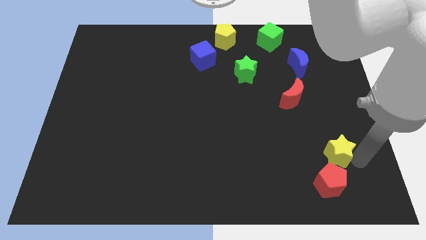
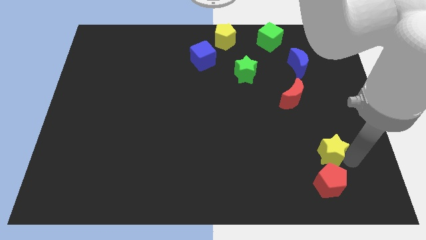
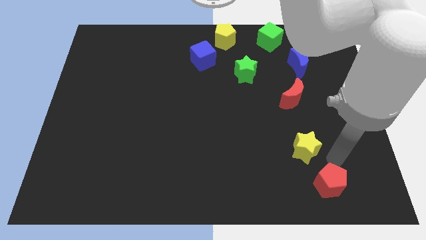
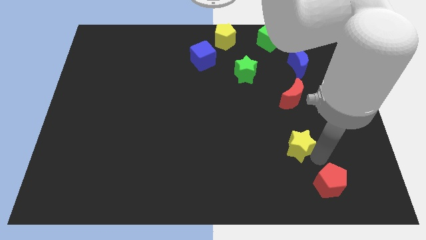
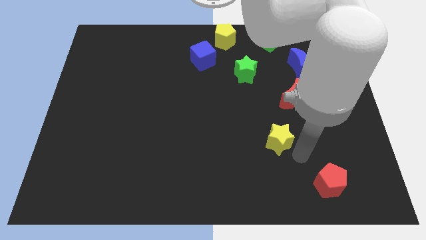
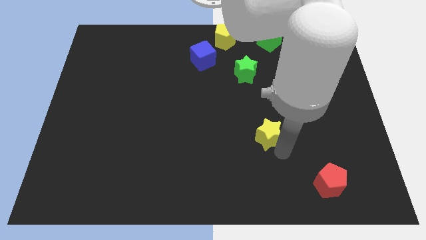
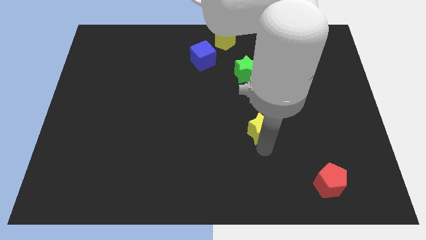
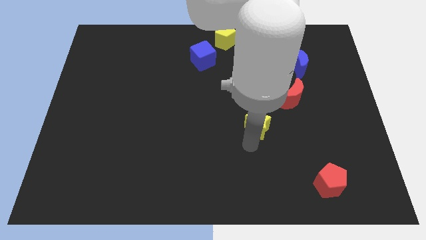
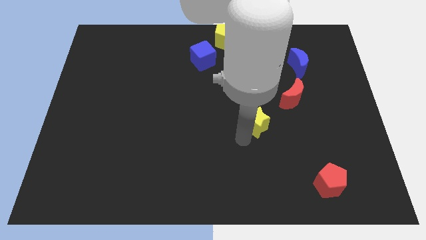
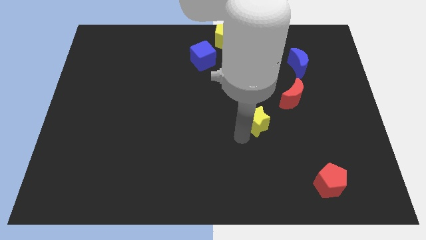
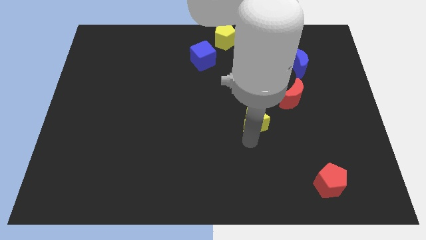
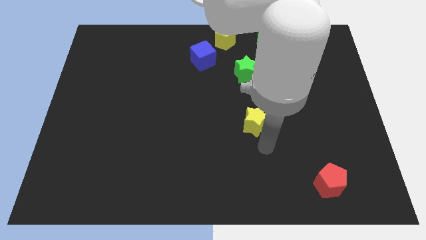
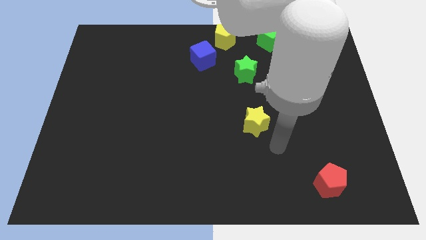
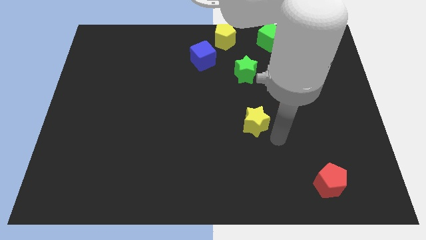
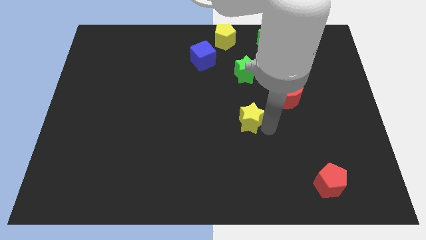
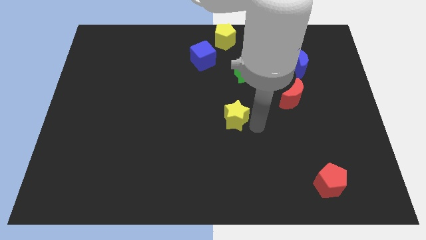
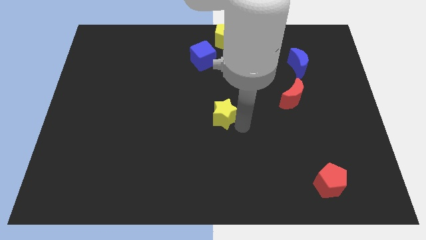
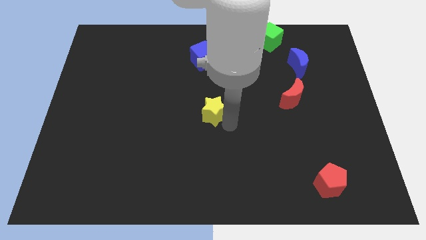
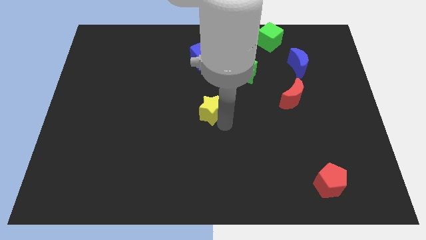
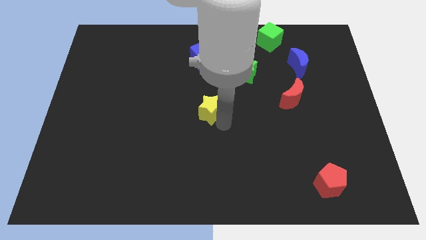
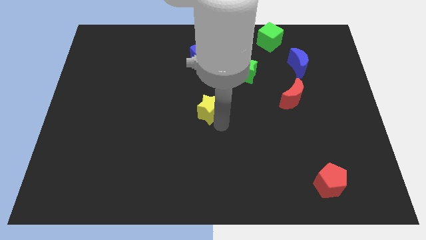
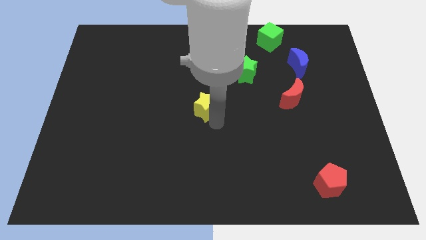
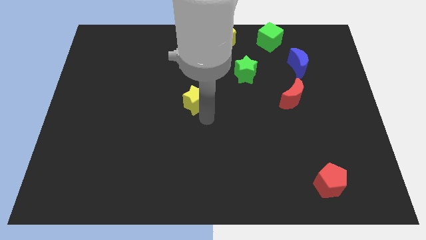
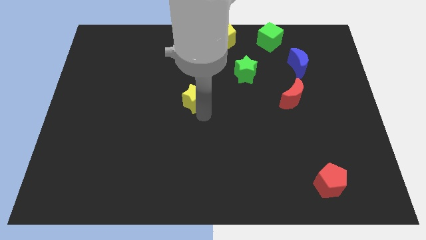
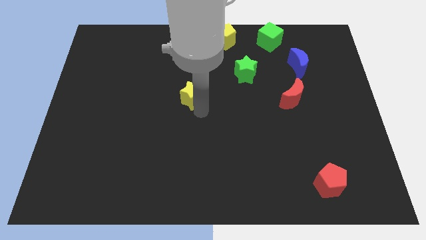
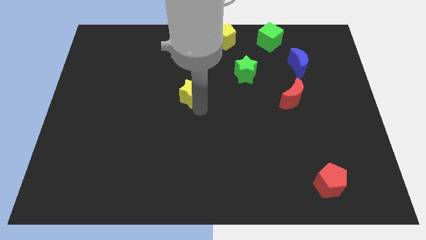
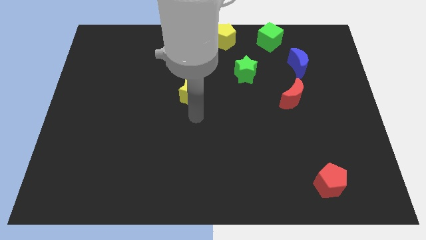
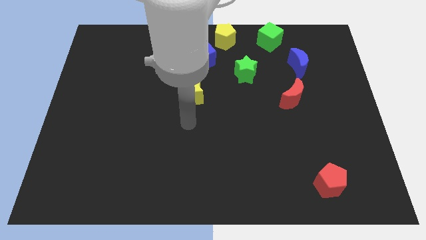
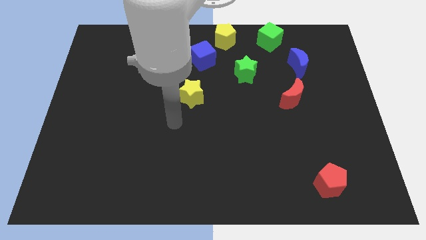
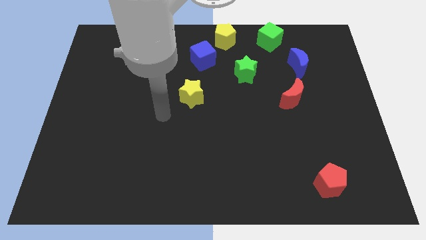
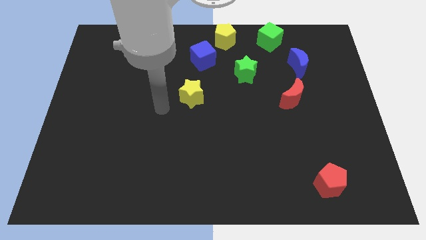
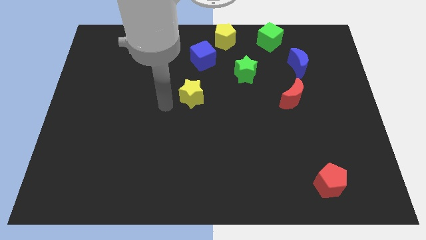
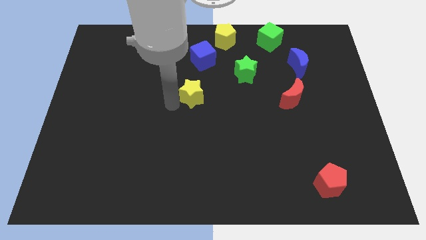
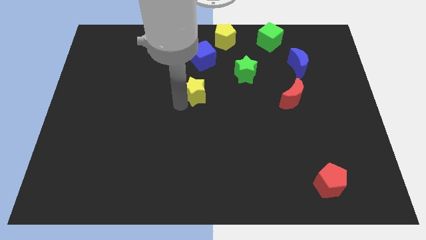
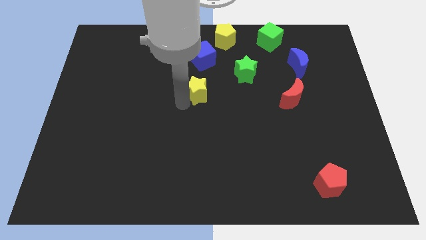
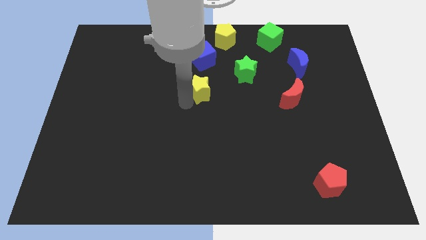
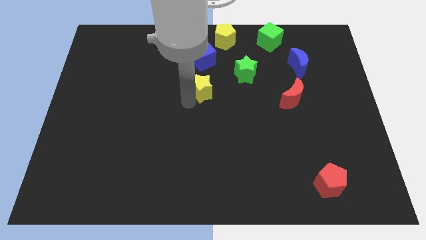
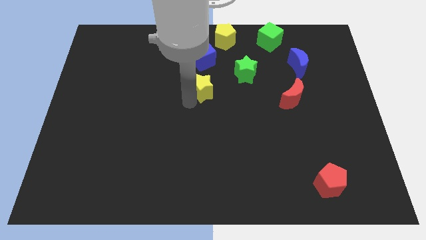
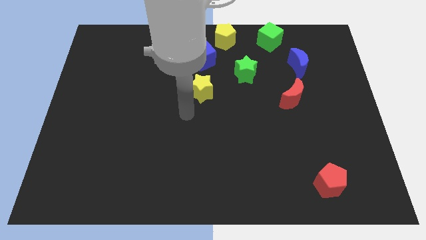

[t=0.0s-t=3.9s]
push the yellow star towards below to the blue cube

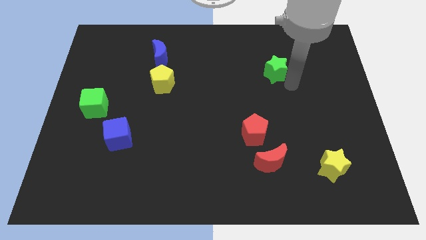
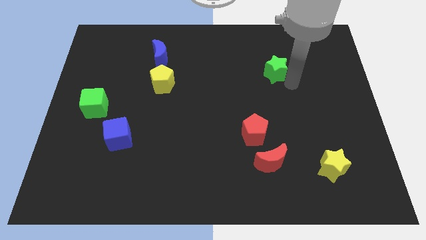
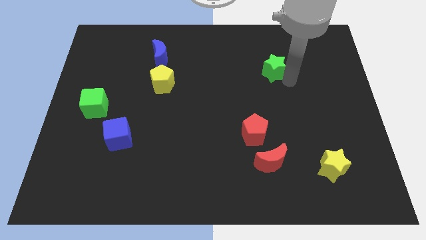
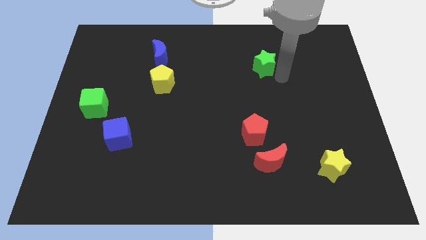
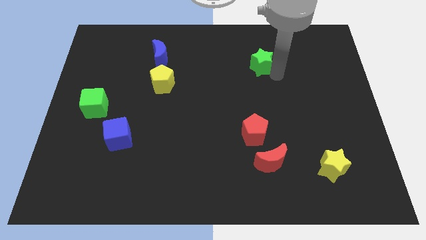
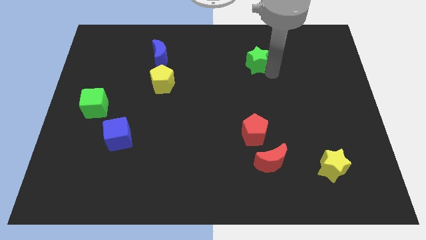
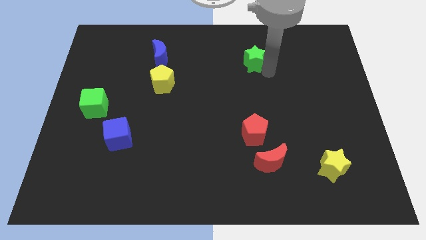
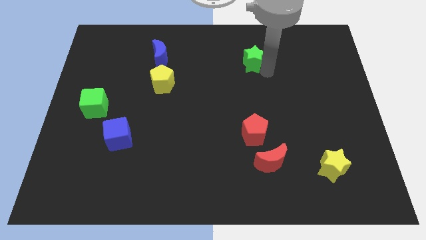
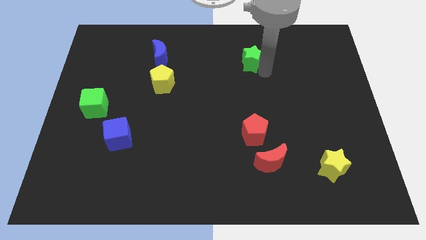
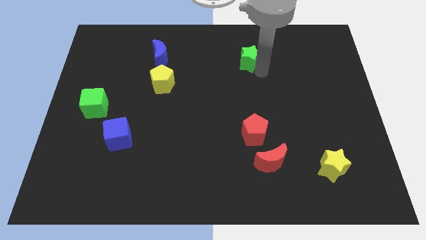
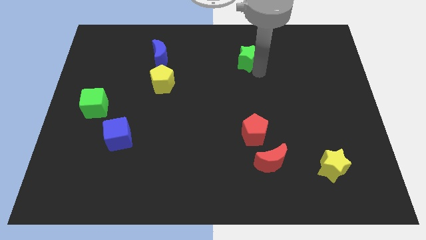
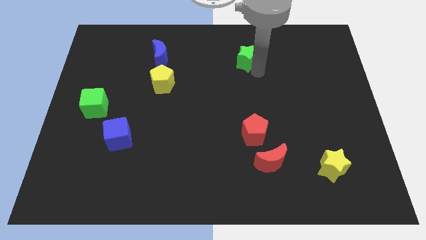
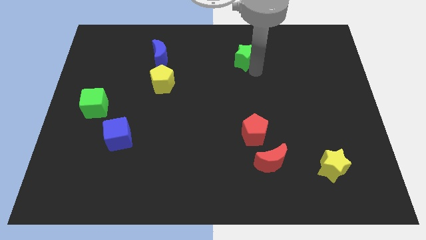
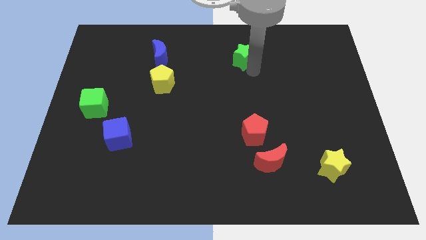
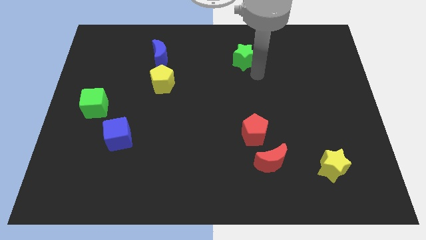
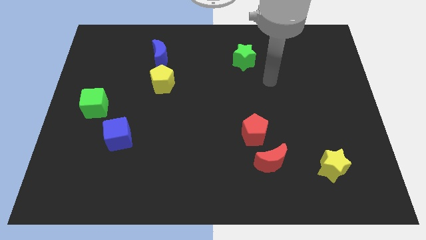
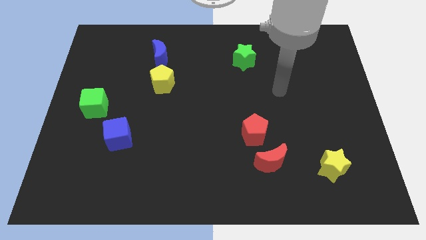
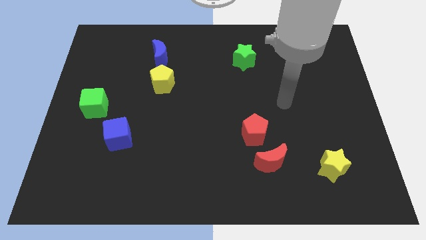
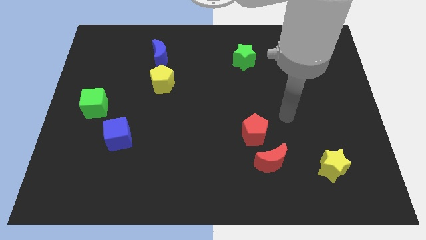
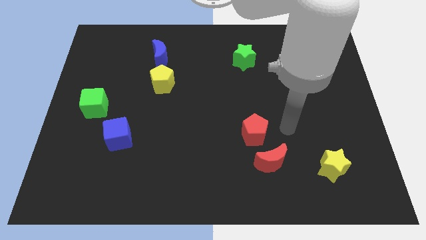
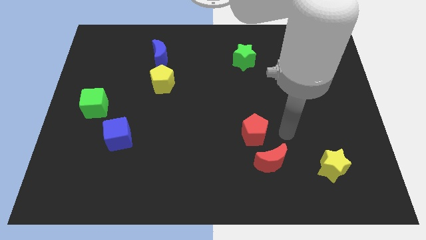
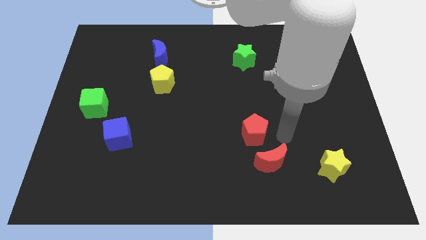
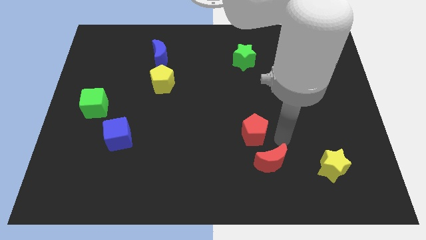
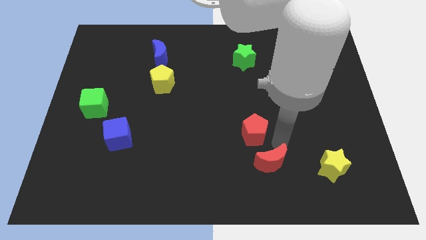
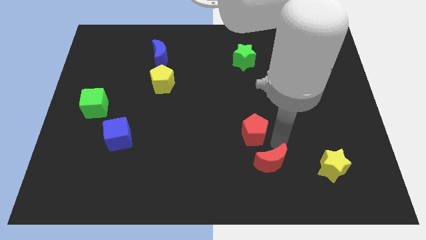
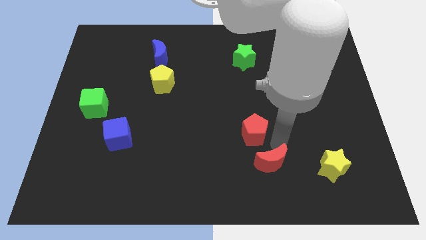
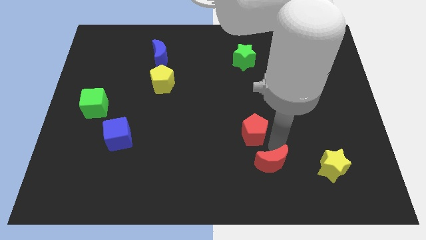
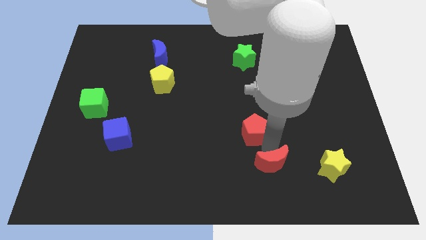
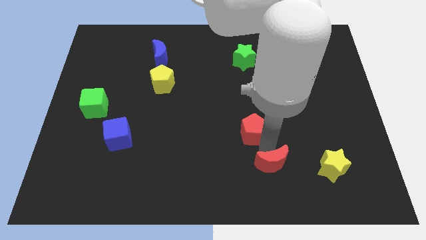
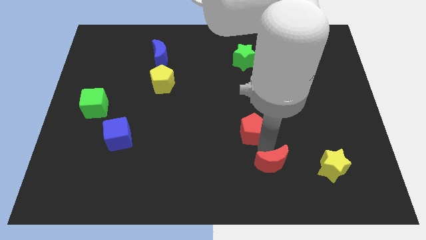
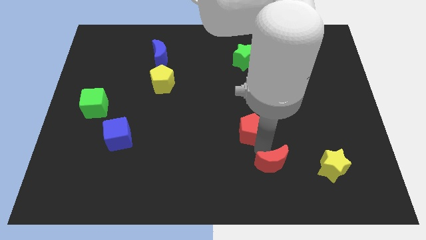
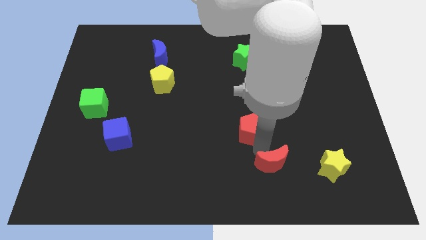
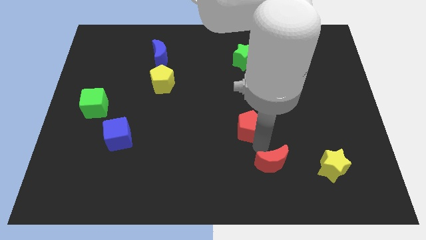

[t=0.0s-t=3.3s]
place your hand in between red pentagon and red moon

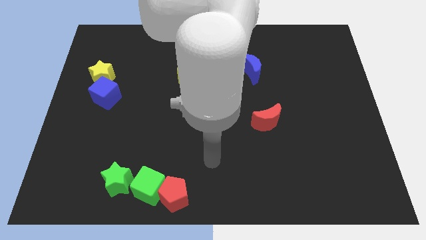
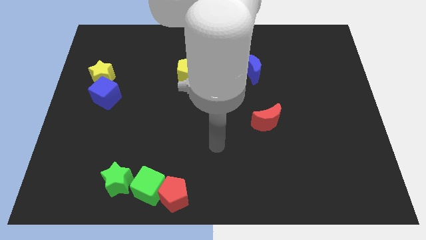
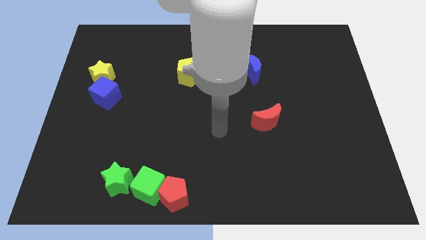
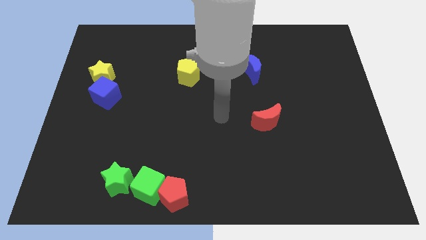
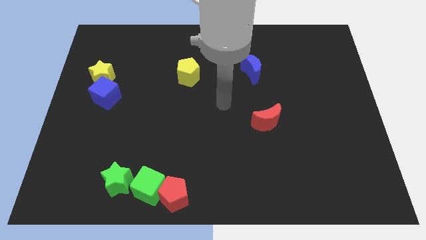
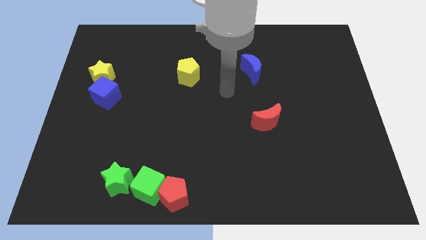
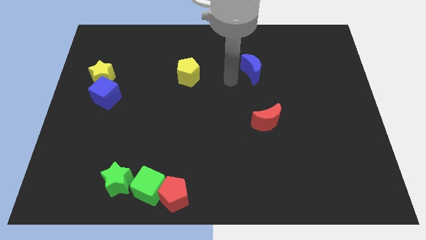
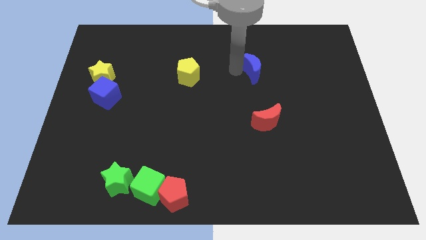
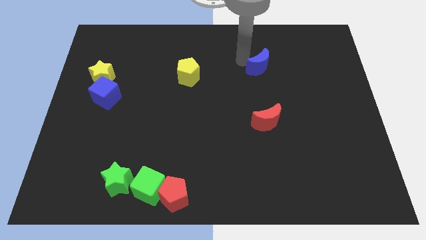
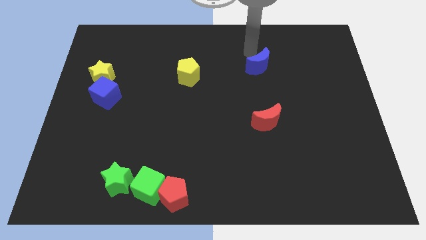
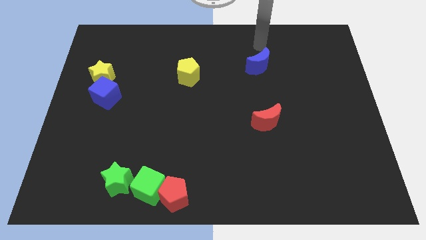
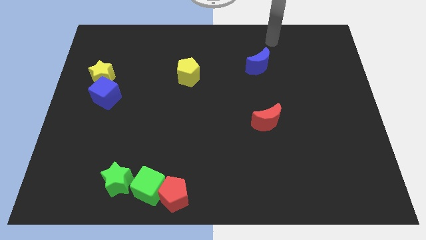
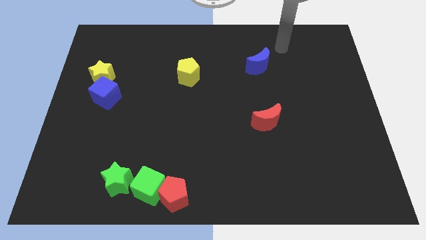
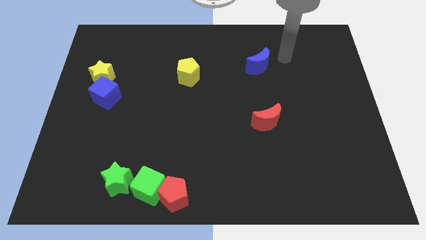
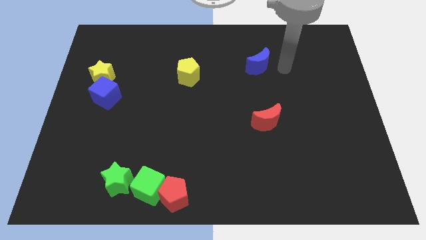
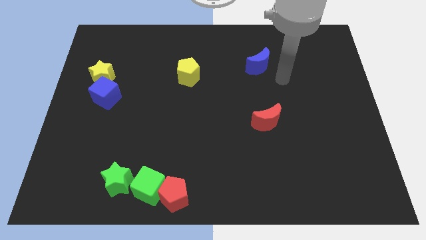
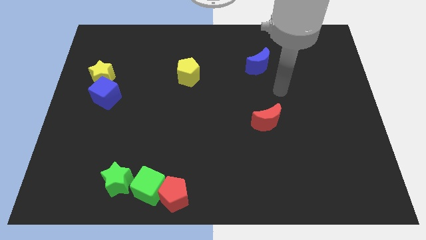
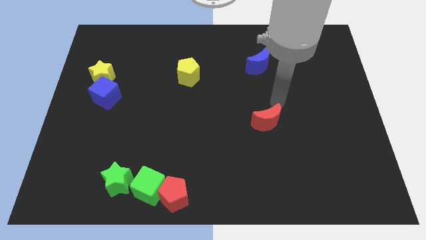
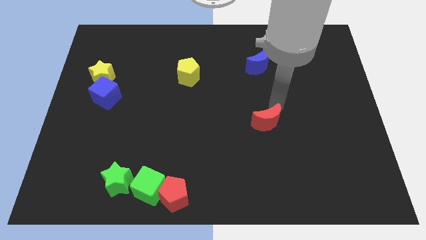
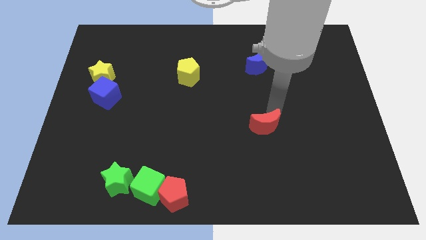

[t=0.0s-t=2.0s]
move your arm away from the red pentagon
